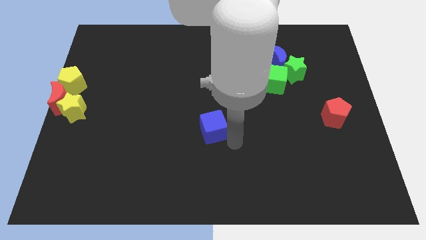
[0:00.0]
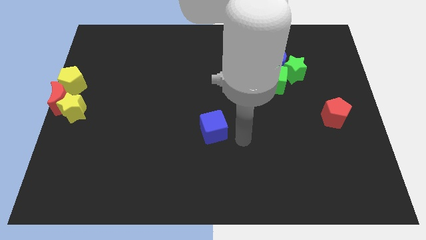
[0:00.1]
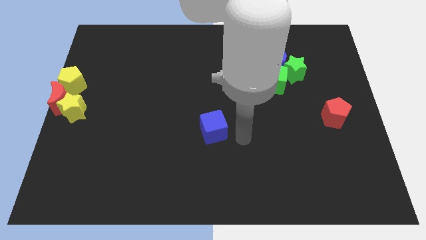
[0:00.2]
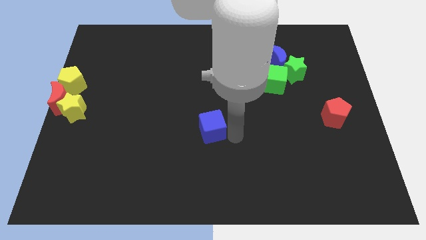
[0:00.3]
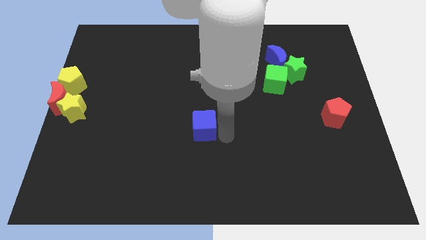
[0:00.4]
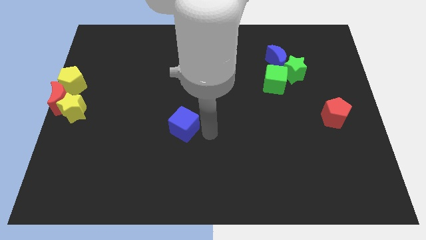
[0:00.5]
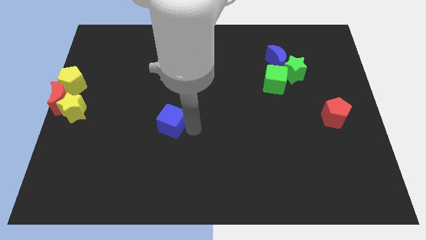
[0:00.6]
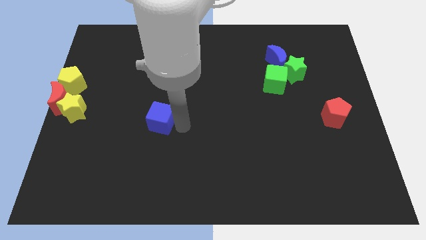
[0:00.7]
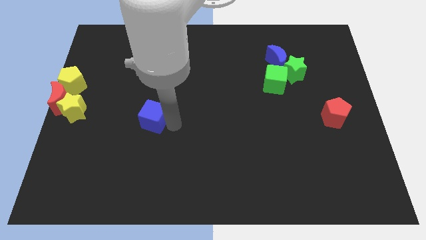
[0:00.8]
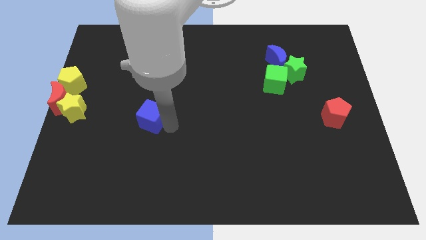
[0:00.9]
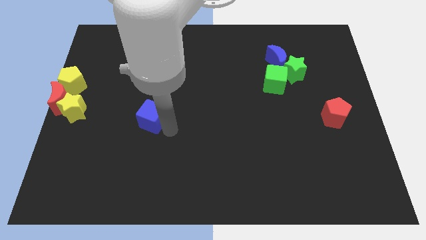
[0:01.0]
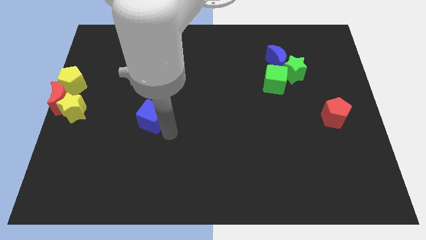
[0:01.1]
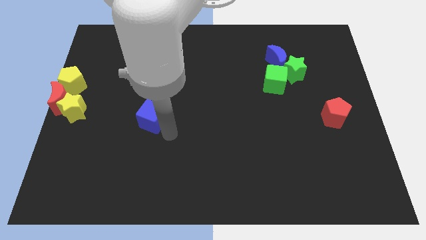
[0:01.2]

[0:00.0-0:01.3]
push blue cube to the parallel right of the yellow star

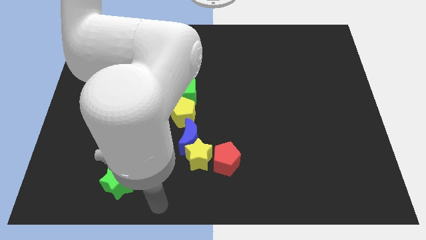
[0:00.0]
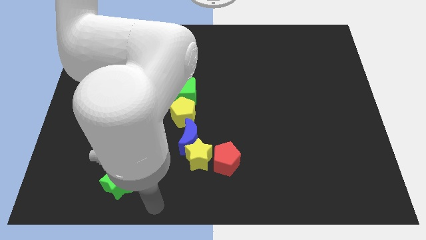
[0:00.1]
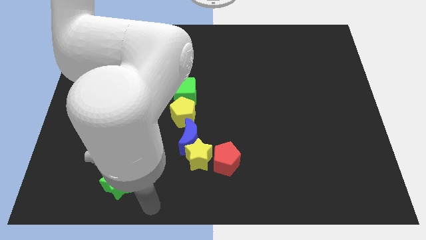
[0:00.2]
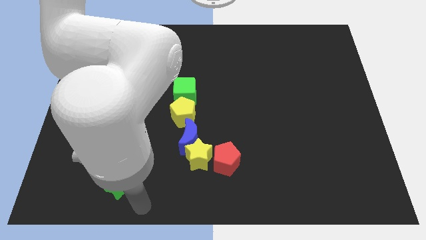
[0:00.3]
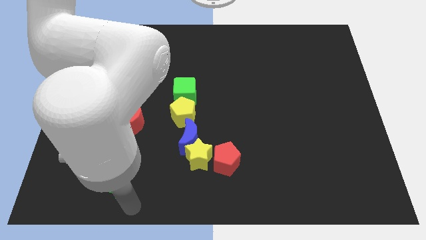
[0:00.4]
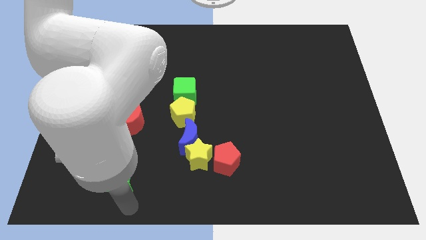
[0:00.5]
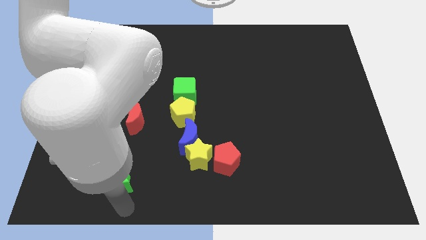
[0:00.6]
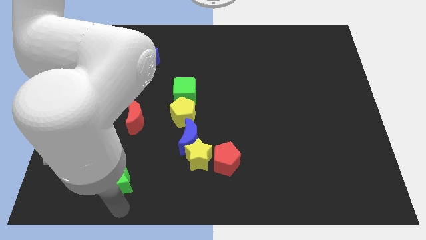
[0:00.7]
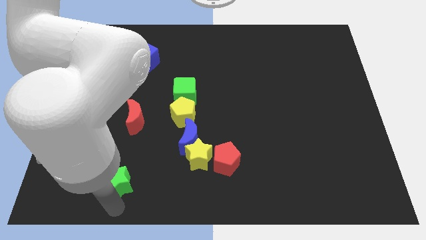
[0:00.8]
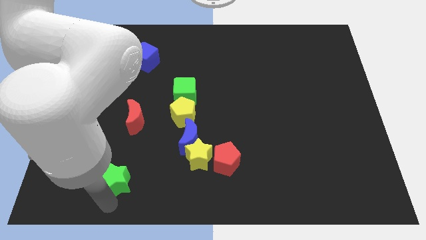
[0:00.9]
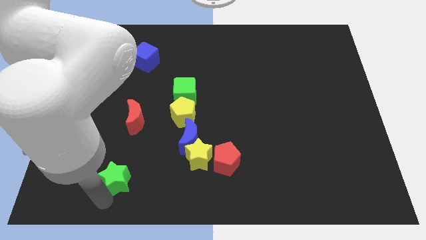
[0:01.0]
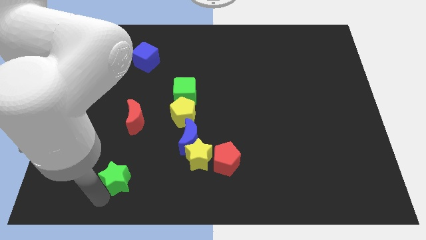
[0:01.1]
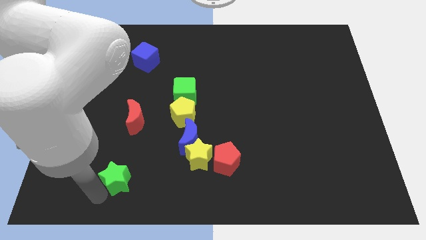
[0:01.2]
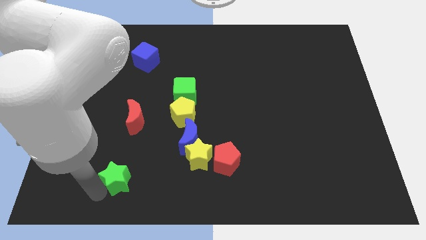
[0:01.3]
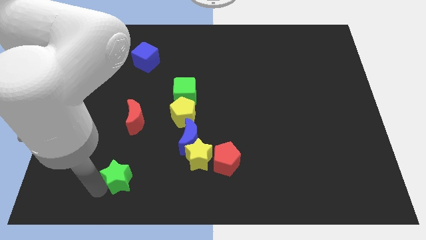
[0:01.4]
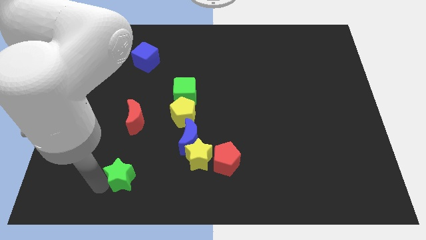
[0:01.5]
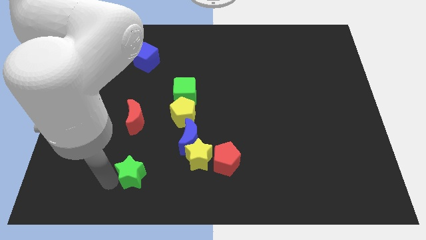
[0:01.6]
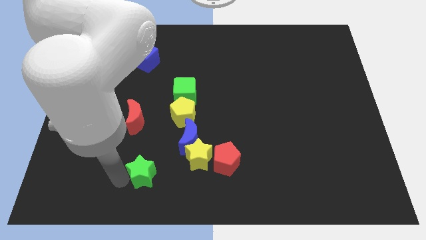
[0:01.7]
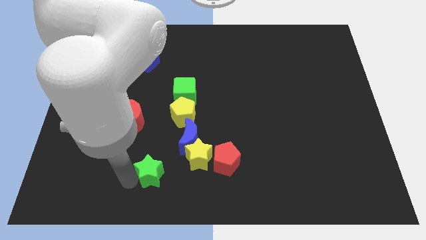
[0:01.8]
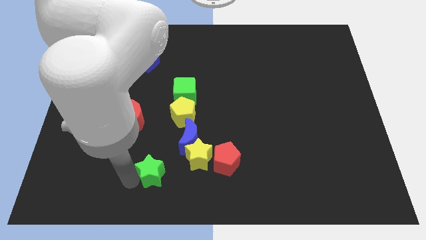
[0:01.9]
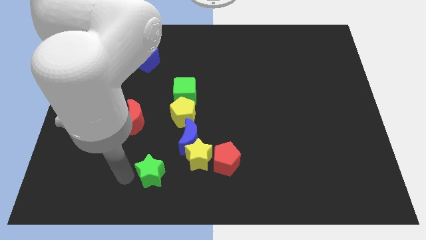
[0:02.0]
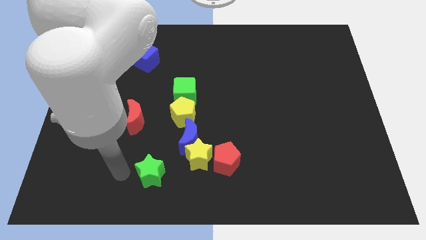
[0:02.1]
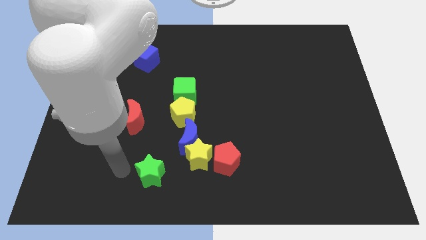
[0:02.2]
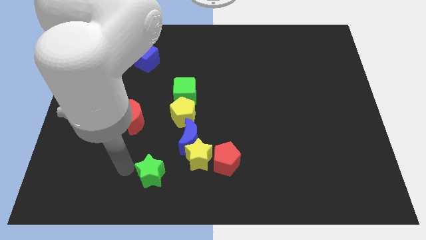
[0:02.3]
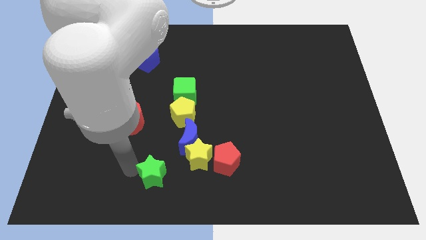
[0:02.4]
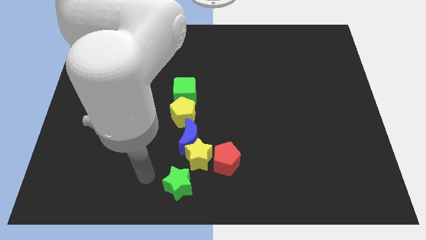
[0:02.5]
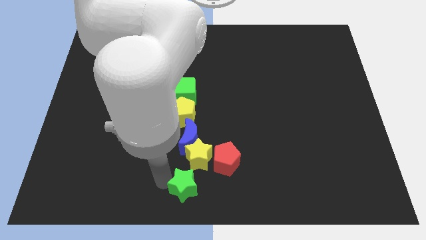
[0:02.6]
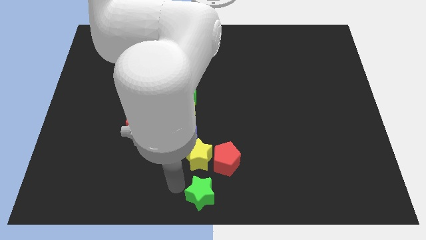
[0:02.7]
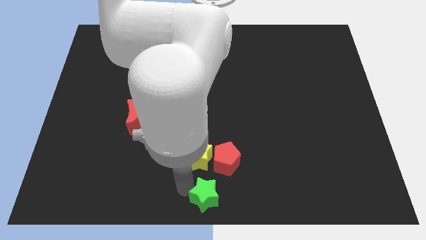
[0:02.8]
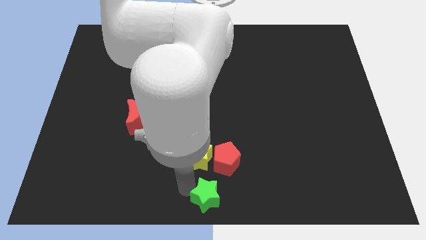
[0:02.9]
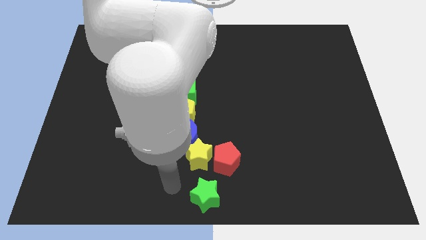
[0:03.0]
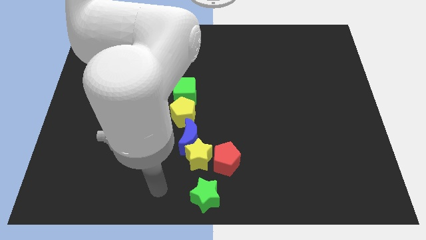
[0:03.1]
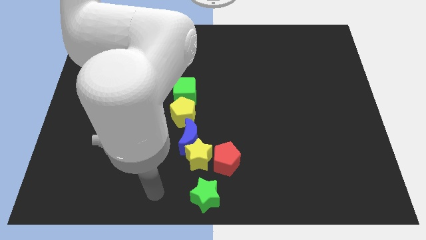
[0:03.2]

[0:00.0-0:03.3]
move the green star down to the yellow star

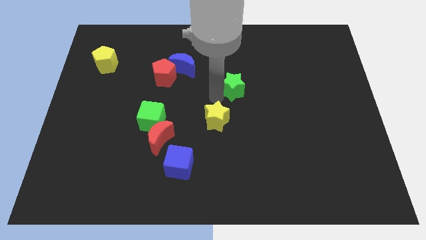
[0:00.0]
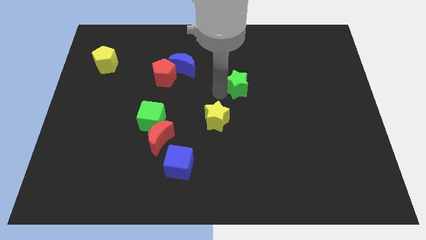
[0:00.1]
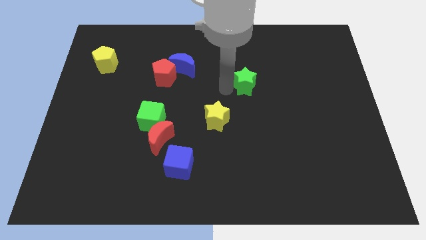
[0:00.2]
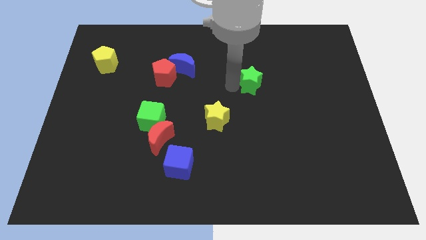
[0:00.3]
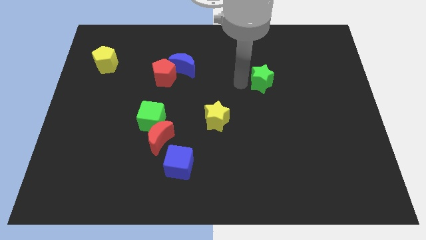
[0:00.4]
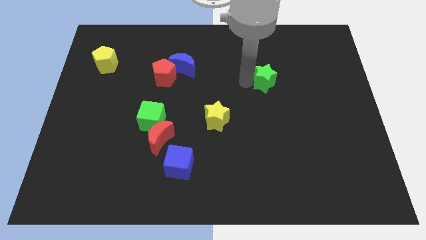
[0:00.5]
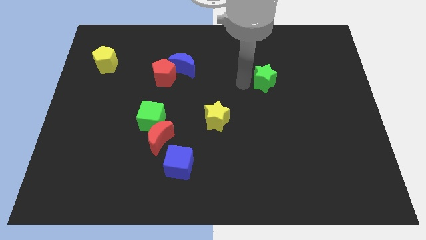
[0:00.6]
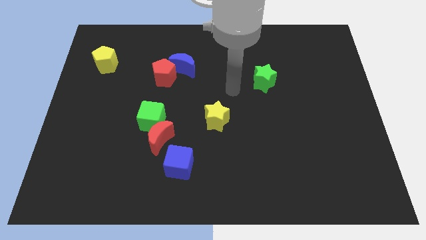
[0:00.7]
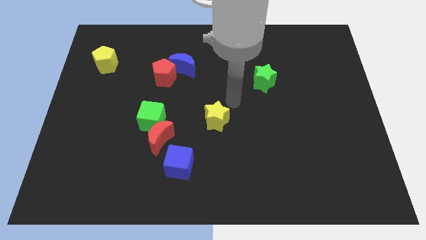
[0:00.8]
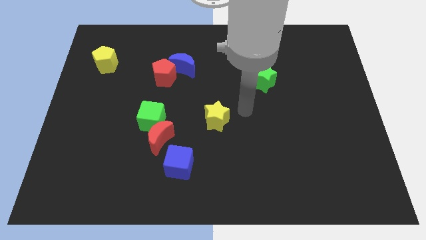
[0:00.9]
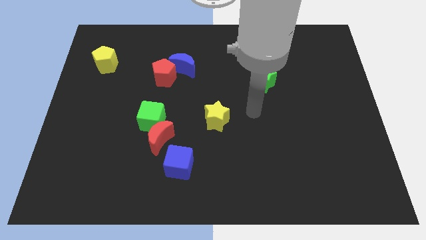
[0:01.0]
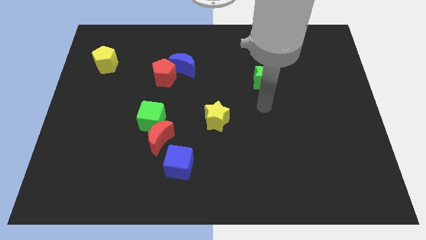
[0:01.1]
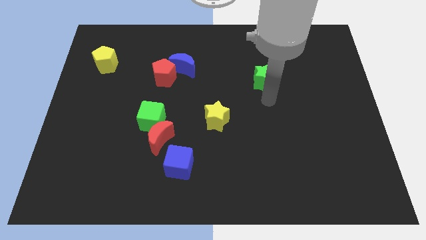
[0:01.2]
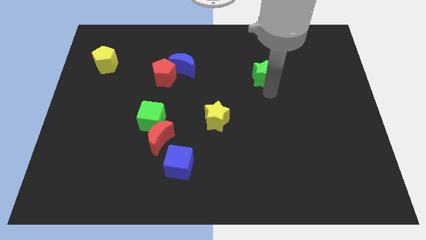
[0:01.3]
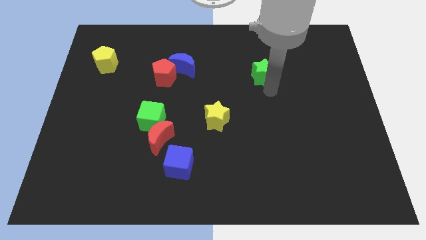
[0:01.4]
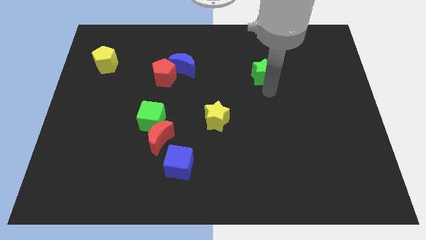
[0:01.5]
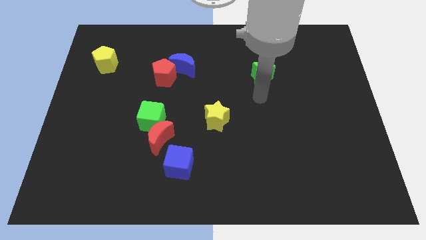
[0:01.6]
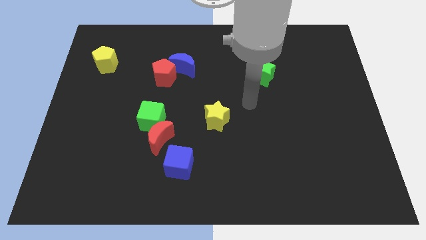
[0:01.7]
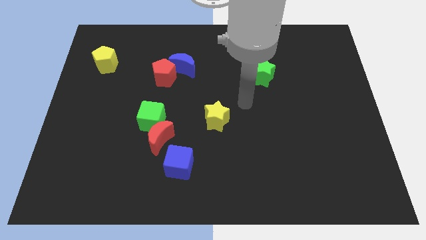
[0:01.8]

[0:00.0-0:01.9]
move the green star parallel to the right of the blue crescent

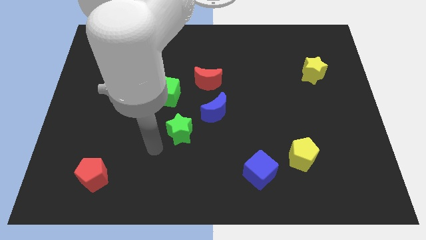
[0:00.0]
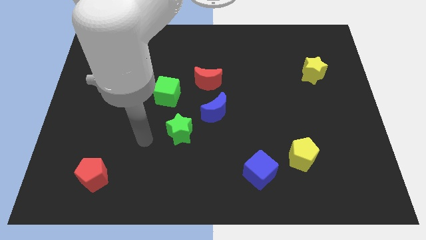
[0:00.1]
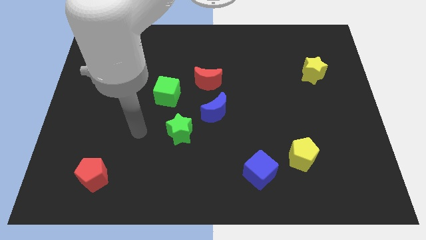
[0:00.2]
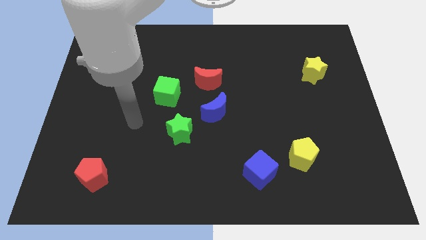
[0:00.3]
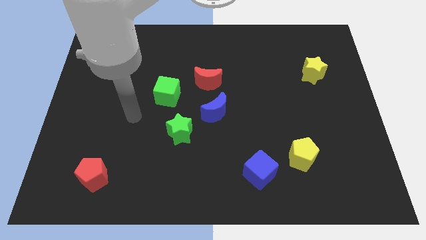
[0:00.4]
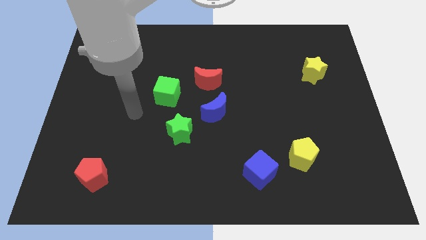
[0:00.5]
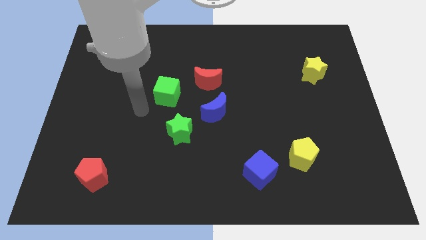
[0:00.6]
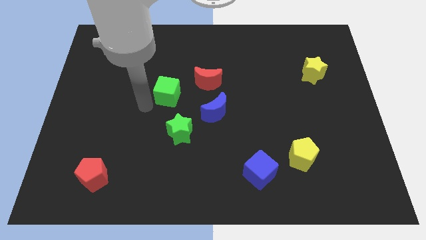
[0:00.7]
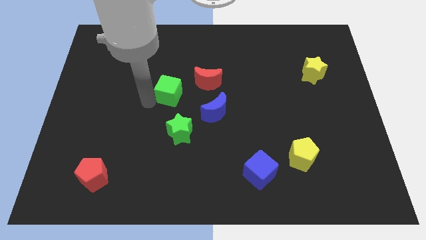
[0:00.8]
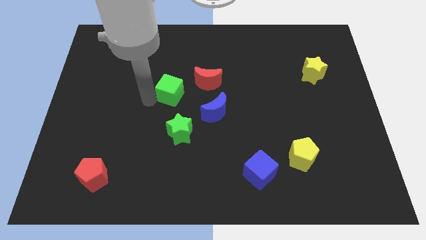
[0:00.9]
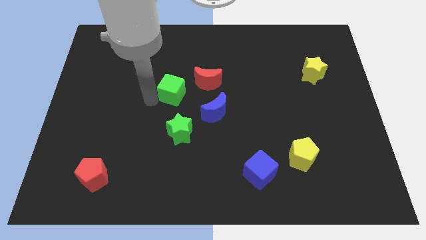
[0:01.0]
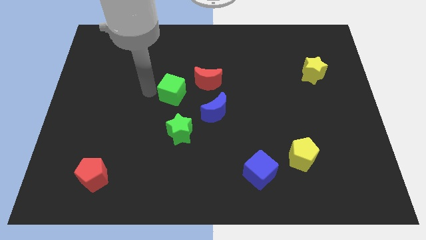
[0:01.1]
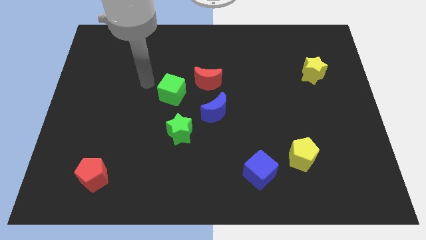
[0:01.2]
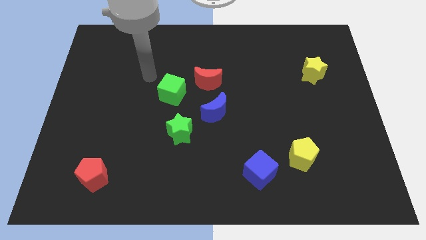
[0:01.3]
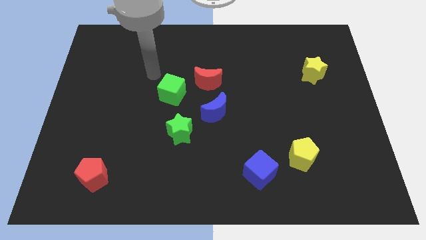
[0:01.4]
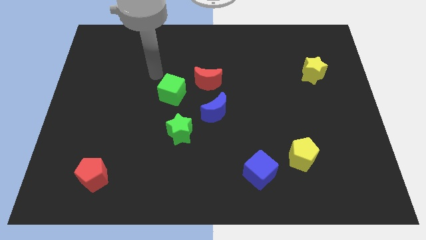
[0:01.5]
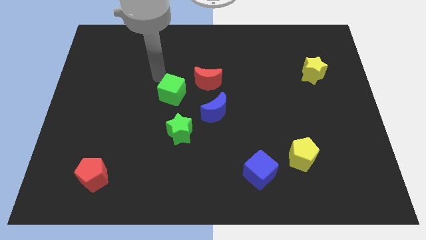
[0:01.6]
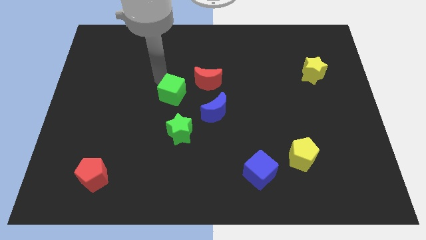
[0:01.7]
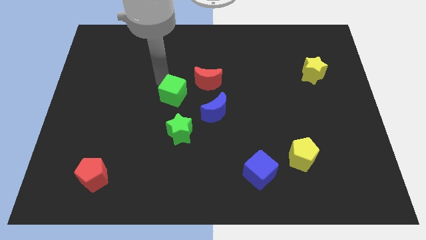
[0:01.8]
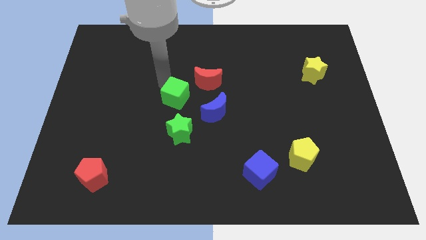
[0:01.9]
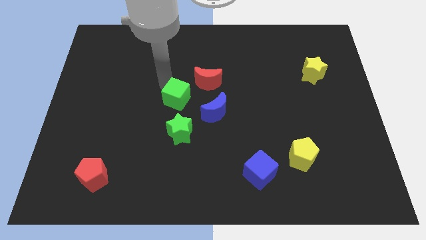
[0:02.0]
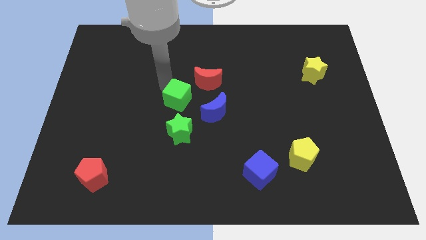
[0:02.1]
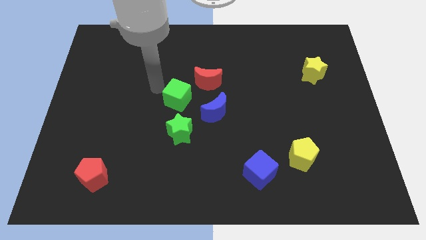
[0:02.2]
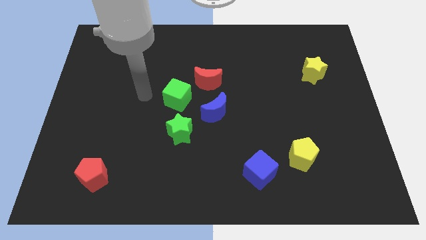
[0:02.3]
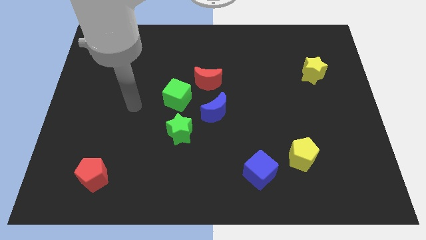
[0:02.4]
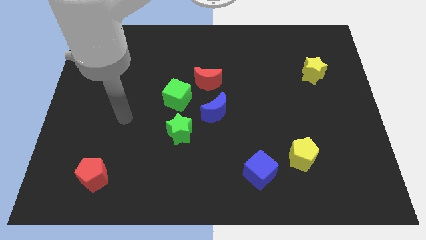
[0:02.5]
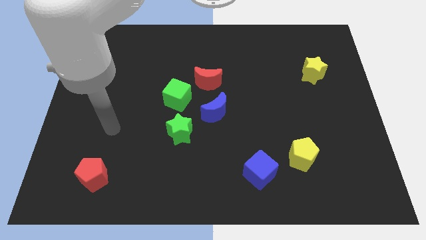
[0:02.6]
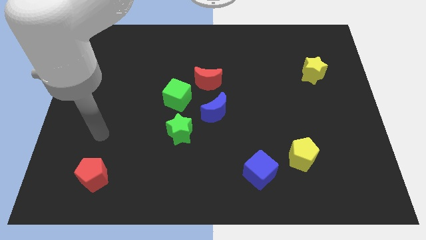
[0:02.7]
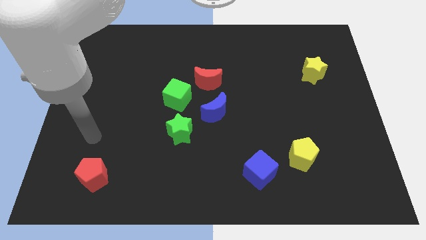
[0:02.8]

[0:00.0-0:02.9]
move green cube slightly towards down
